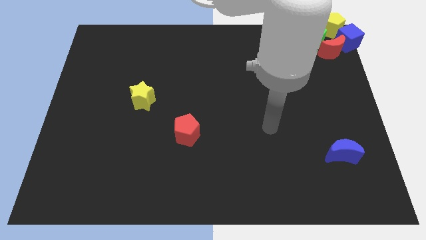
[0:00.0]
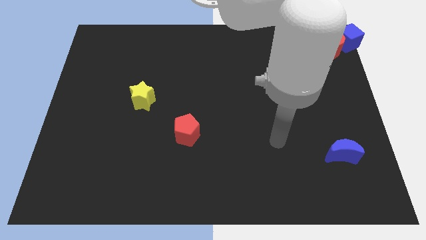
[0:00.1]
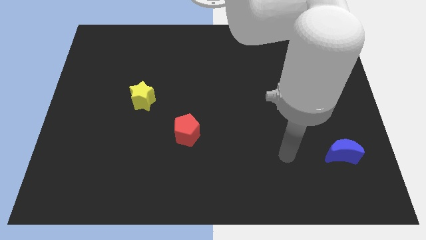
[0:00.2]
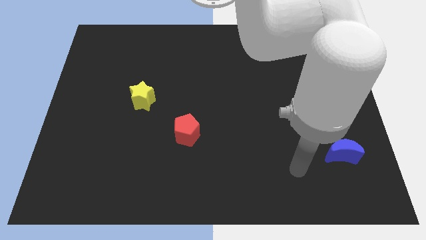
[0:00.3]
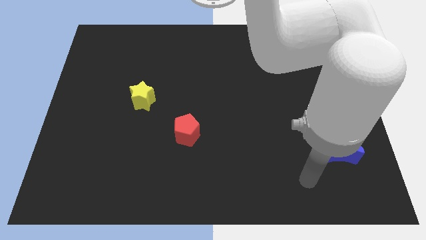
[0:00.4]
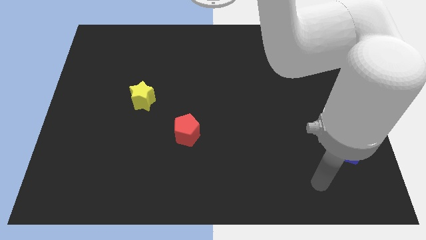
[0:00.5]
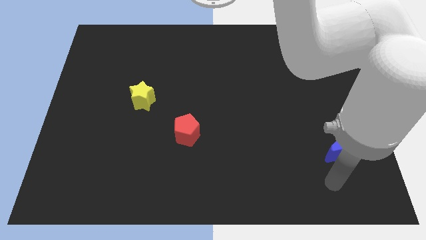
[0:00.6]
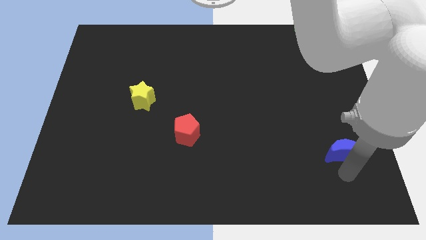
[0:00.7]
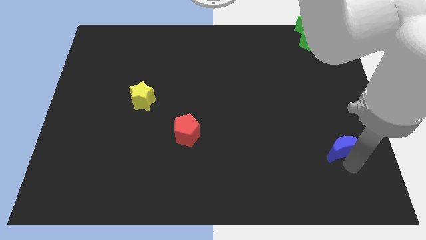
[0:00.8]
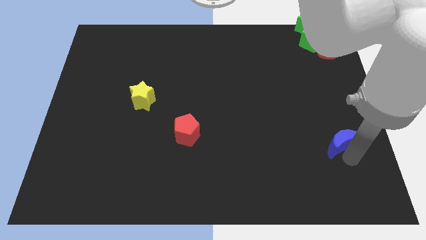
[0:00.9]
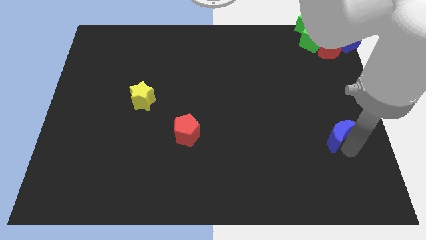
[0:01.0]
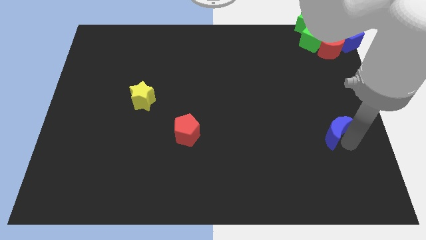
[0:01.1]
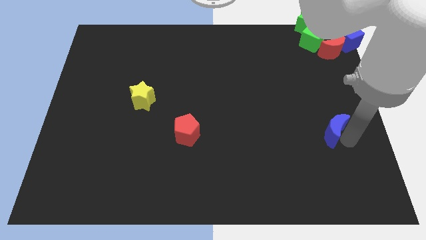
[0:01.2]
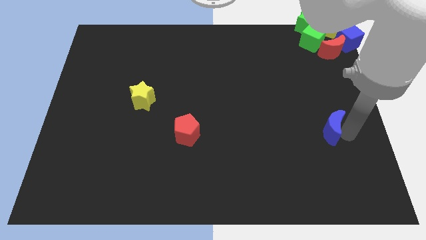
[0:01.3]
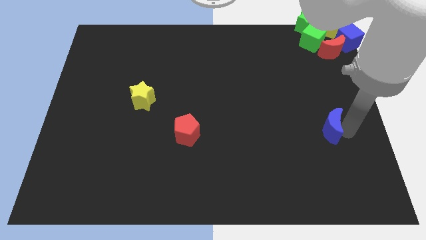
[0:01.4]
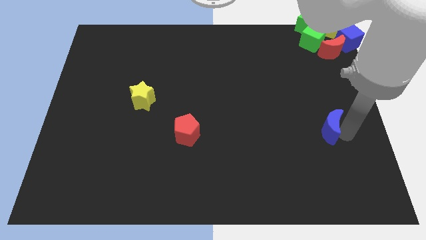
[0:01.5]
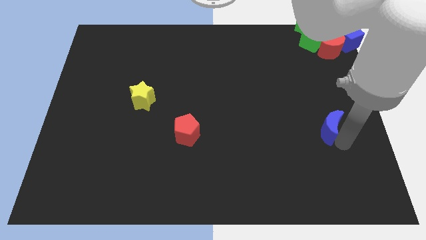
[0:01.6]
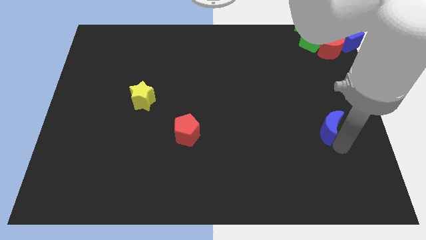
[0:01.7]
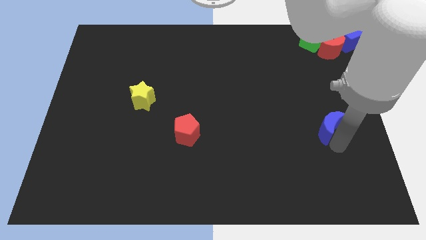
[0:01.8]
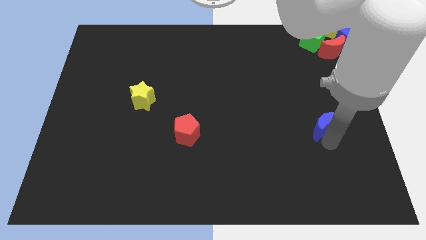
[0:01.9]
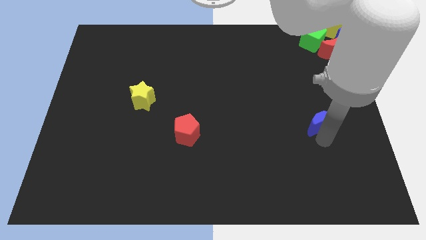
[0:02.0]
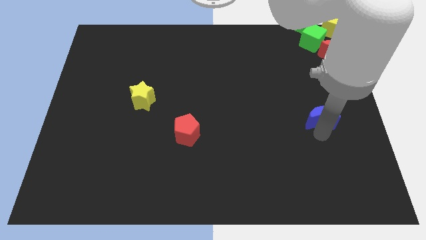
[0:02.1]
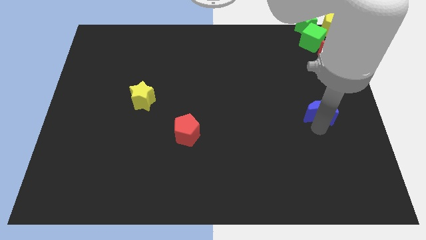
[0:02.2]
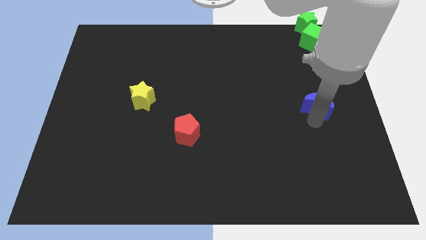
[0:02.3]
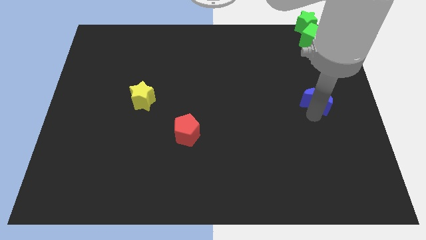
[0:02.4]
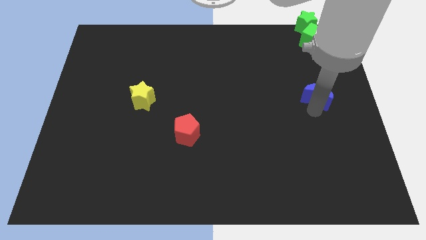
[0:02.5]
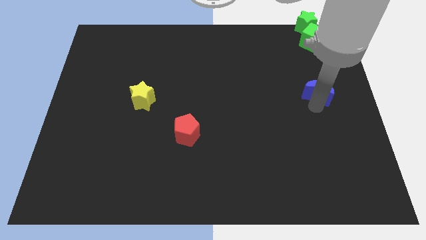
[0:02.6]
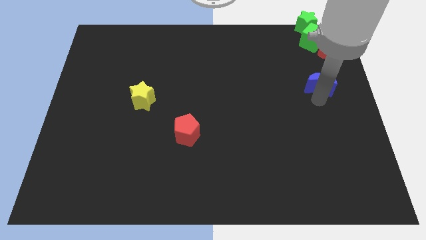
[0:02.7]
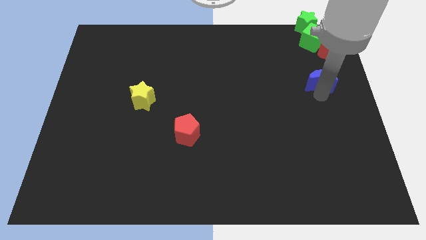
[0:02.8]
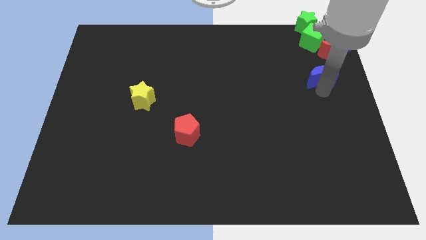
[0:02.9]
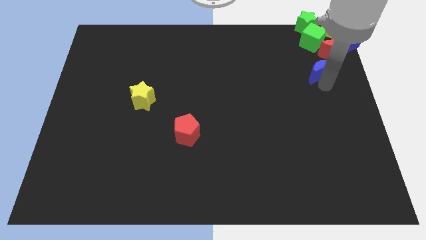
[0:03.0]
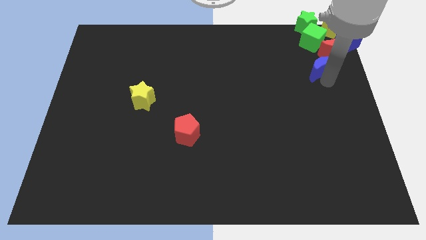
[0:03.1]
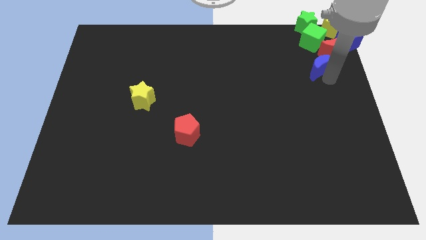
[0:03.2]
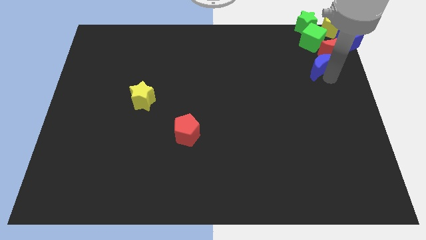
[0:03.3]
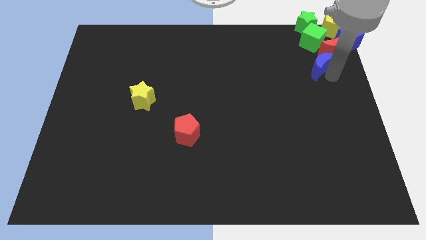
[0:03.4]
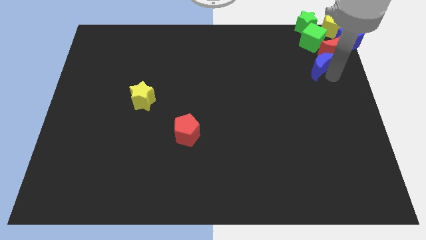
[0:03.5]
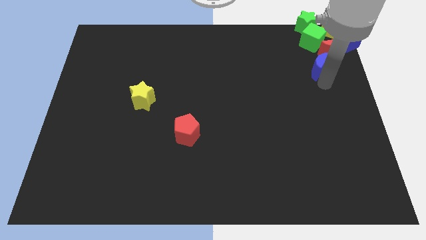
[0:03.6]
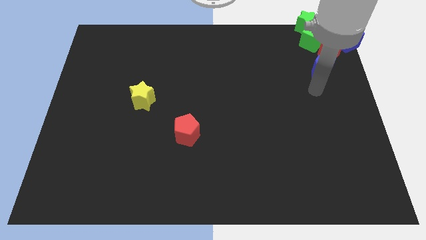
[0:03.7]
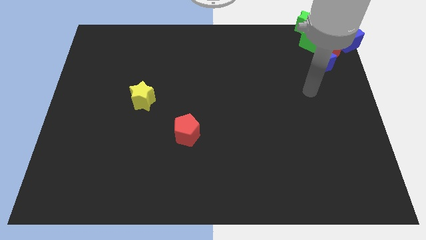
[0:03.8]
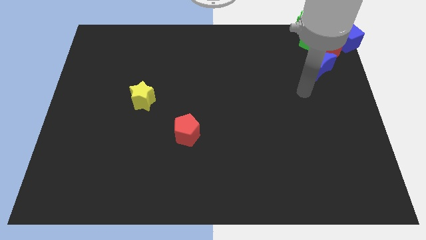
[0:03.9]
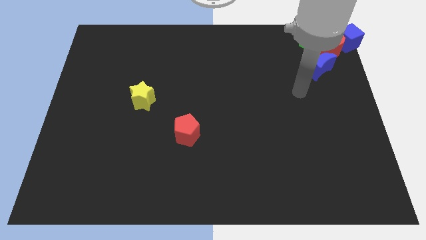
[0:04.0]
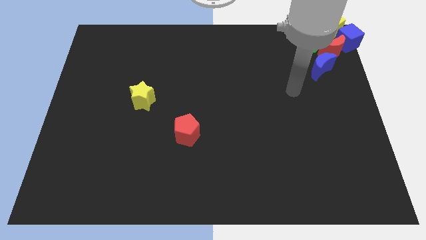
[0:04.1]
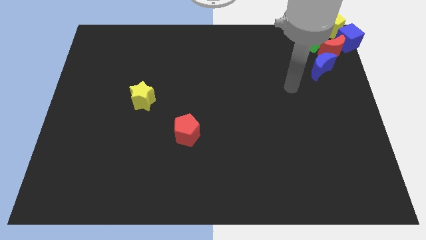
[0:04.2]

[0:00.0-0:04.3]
move the blue moon to the bottom left side of the red moon

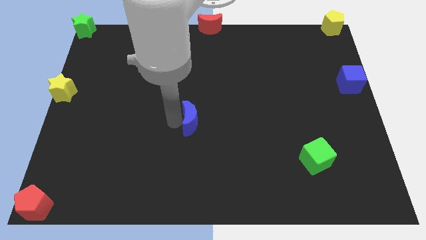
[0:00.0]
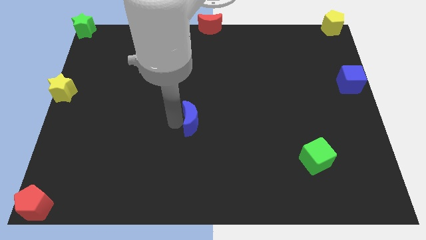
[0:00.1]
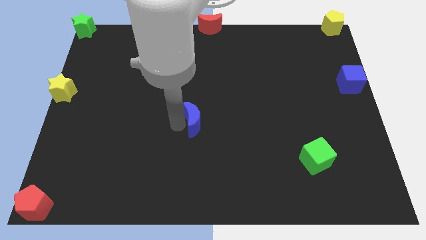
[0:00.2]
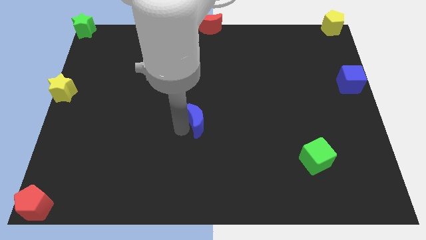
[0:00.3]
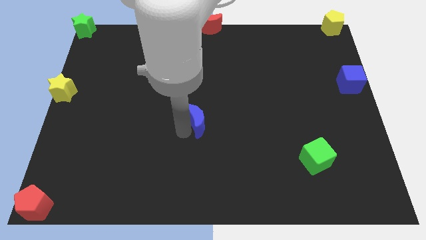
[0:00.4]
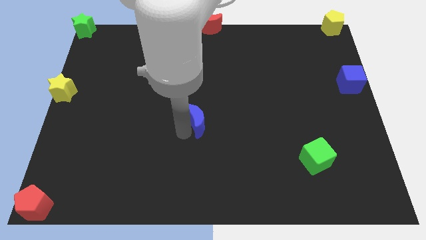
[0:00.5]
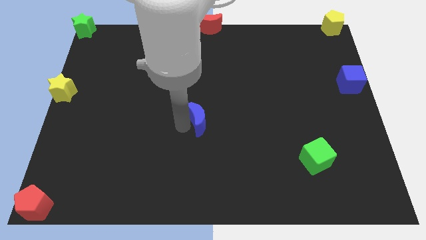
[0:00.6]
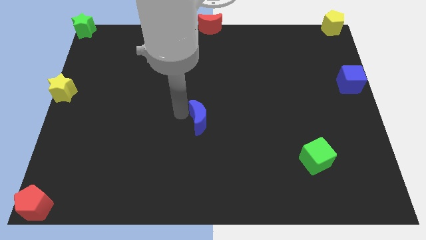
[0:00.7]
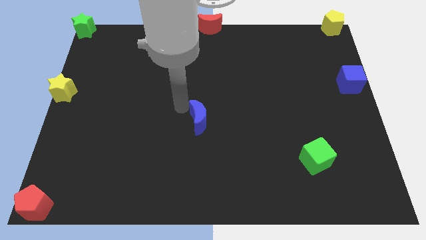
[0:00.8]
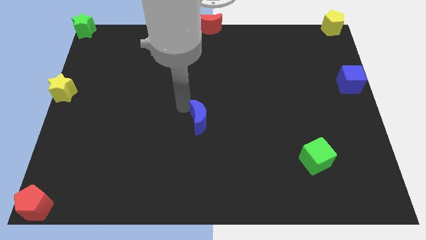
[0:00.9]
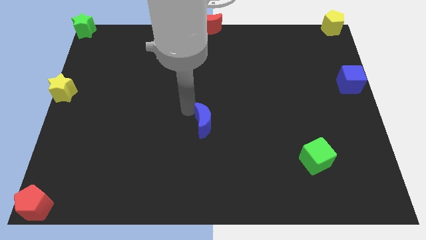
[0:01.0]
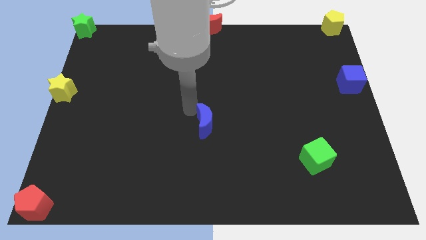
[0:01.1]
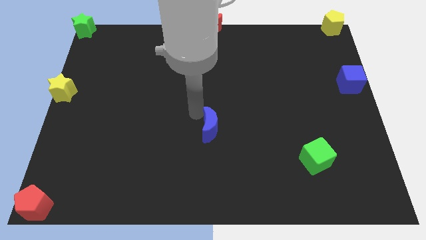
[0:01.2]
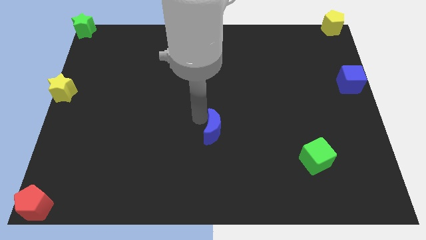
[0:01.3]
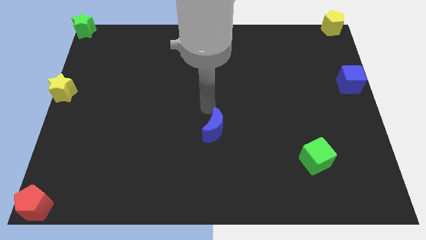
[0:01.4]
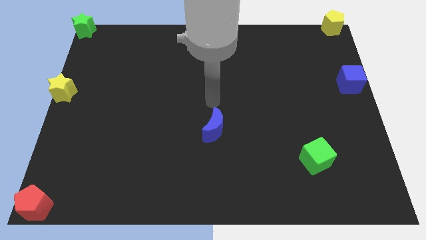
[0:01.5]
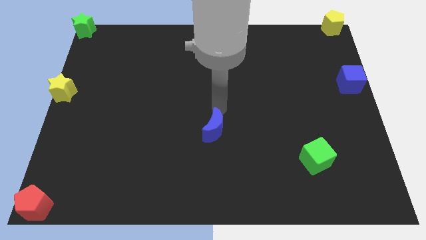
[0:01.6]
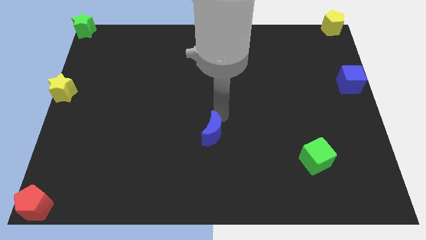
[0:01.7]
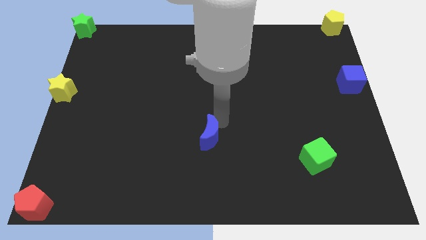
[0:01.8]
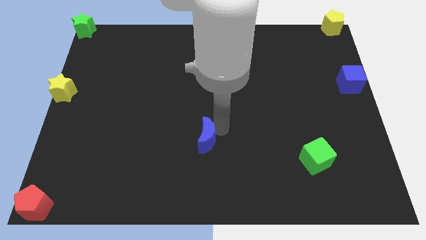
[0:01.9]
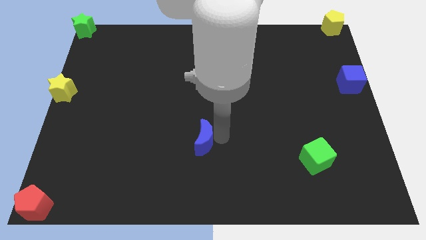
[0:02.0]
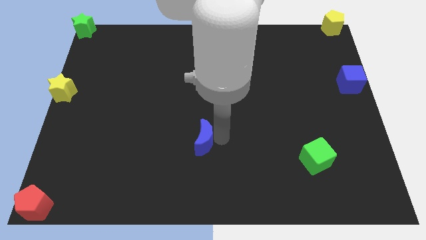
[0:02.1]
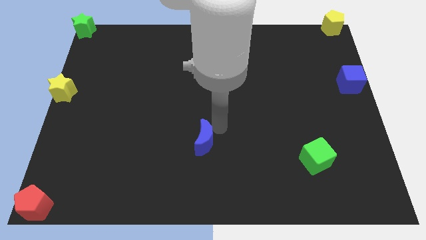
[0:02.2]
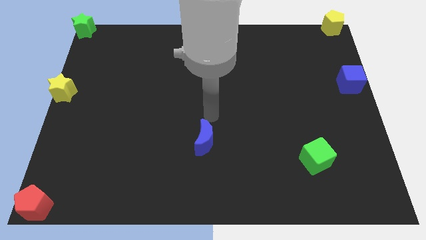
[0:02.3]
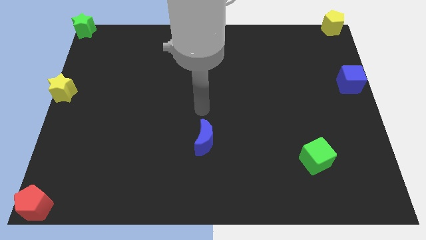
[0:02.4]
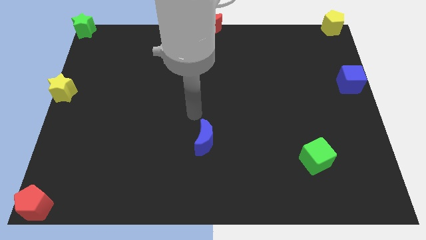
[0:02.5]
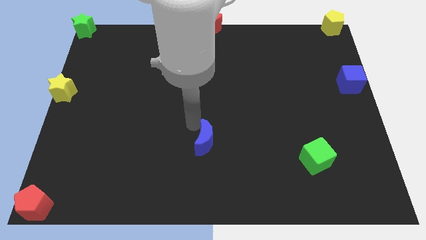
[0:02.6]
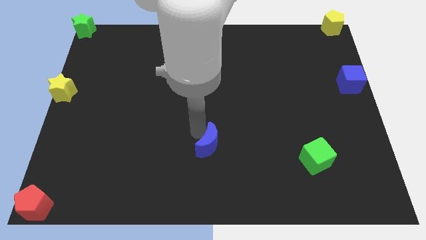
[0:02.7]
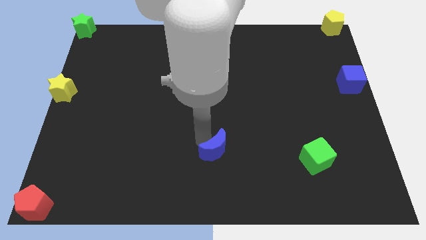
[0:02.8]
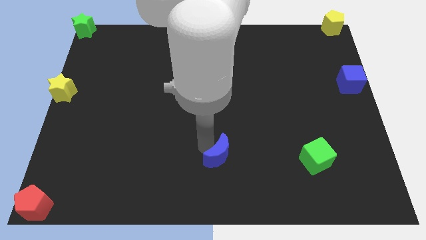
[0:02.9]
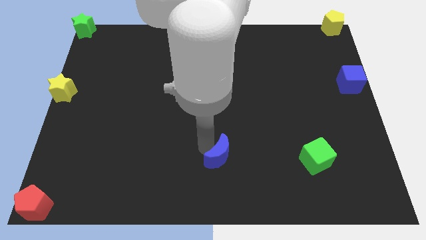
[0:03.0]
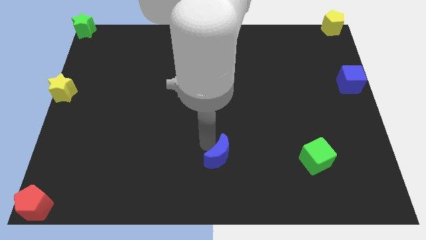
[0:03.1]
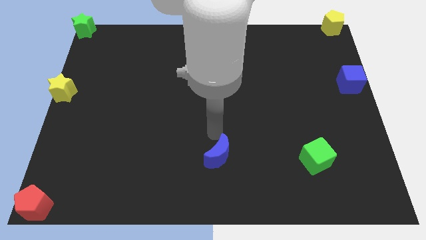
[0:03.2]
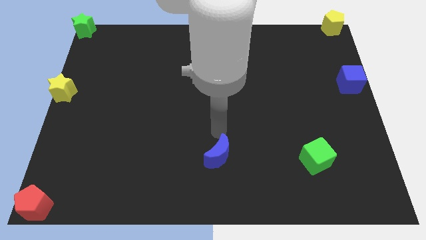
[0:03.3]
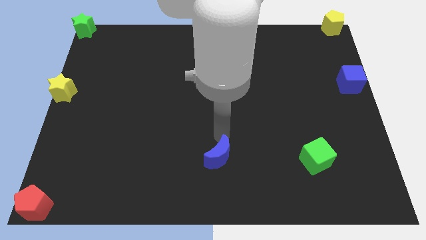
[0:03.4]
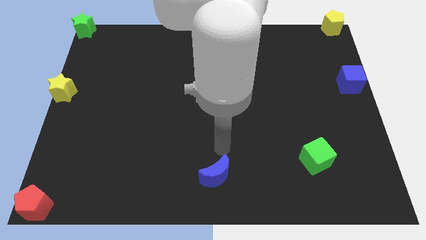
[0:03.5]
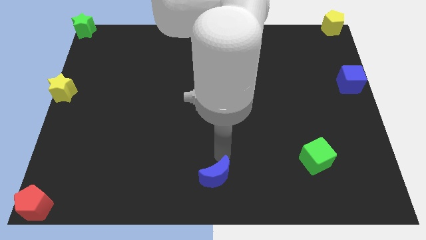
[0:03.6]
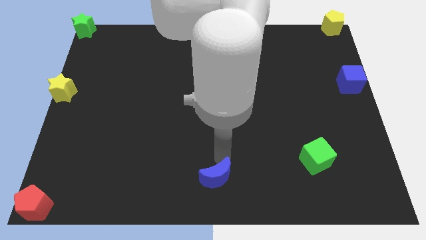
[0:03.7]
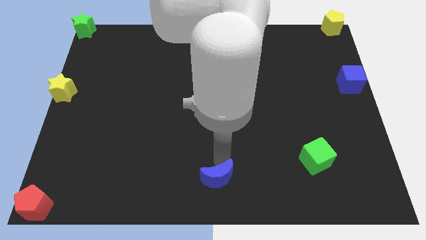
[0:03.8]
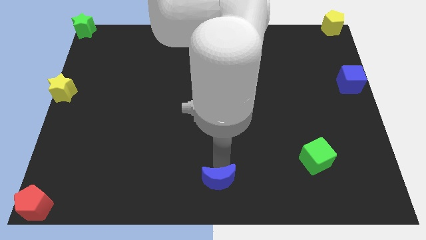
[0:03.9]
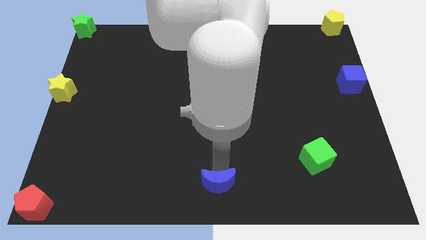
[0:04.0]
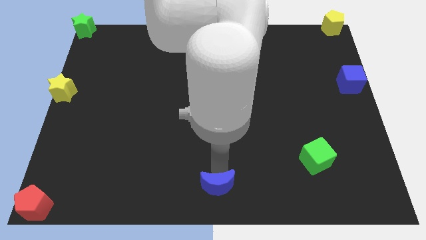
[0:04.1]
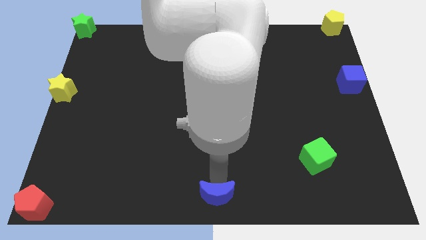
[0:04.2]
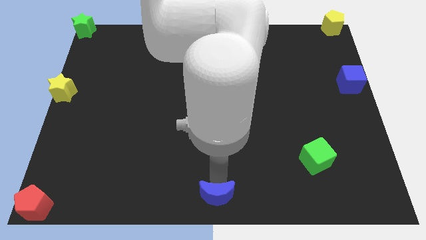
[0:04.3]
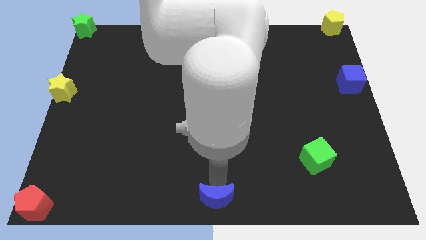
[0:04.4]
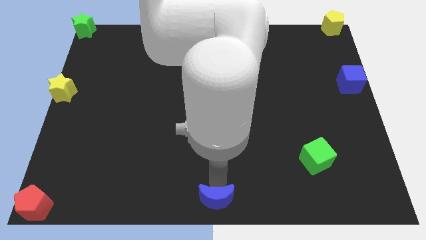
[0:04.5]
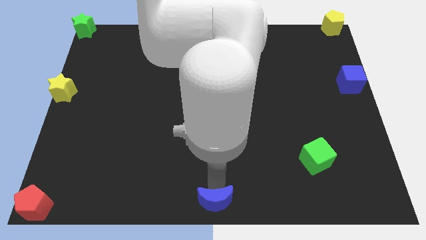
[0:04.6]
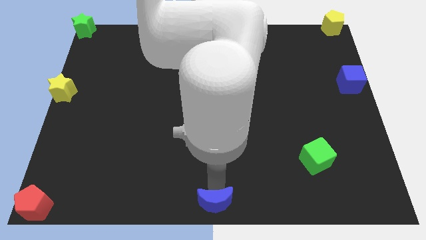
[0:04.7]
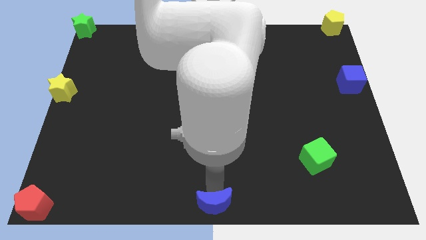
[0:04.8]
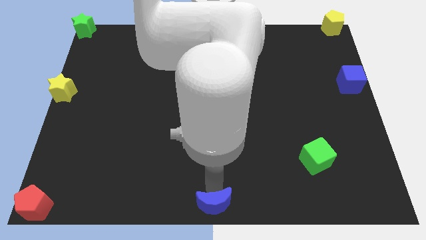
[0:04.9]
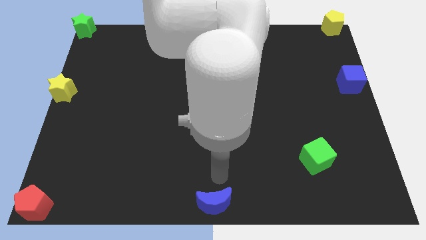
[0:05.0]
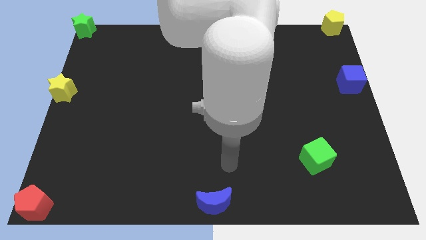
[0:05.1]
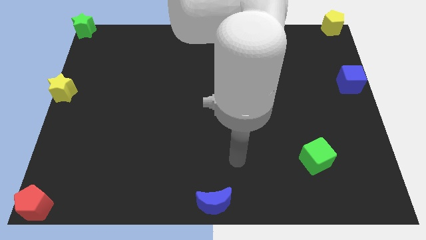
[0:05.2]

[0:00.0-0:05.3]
move blue crescent to the bottom centre of the board
